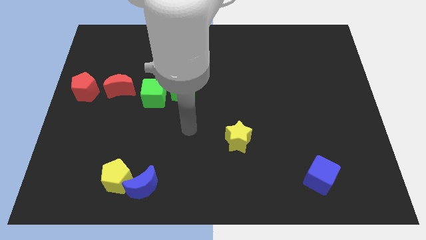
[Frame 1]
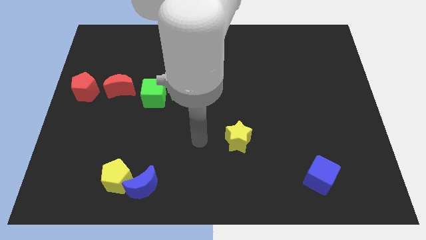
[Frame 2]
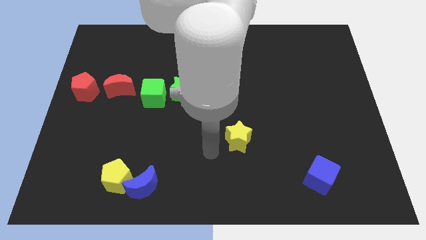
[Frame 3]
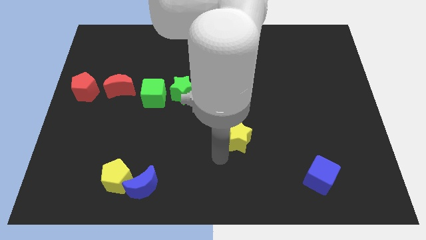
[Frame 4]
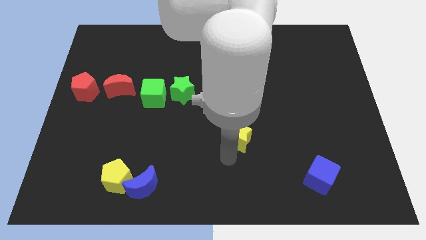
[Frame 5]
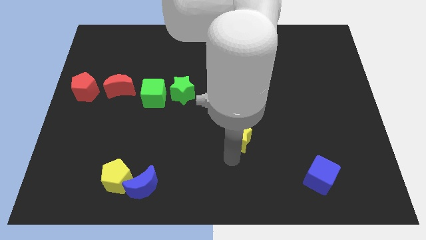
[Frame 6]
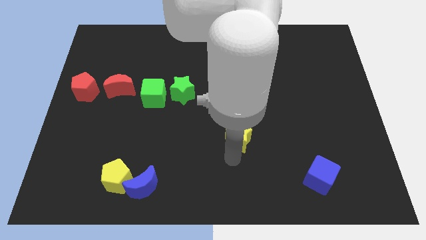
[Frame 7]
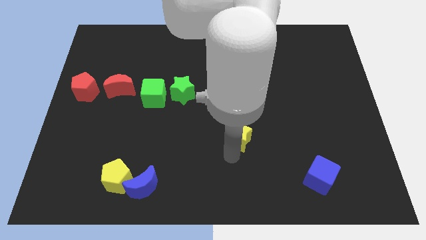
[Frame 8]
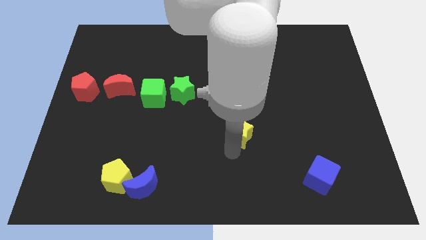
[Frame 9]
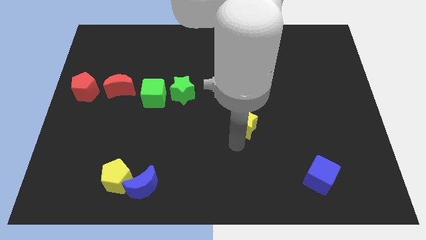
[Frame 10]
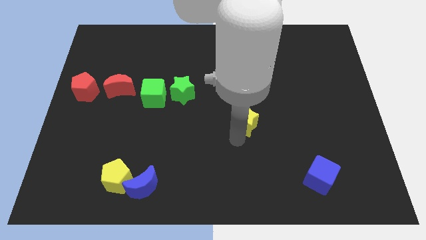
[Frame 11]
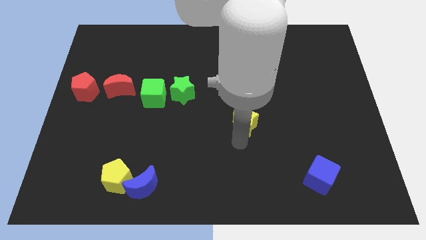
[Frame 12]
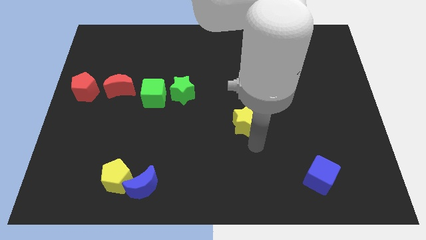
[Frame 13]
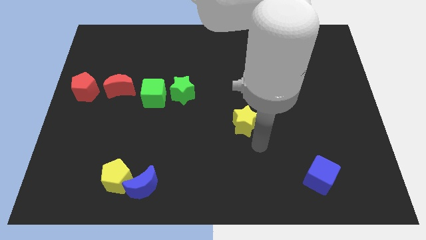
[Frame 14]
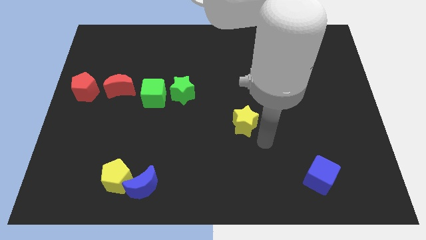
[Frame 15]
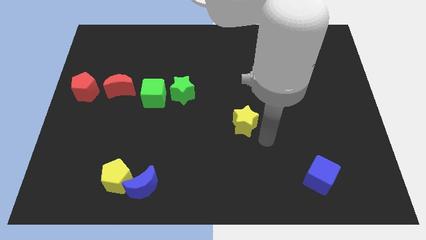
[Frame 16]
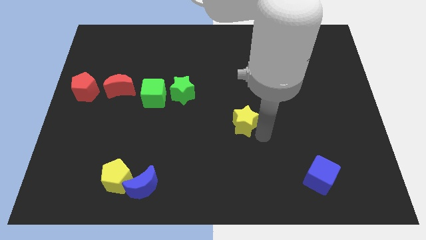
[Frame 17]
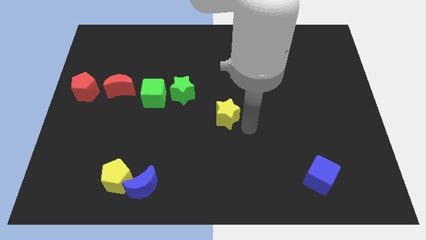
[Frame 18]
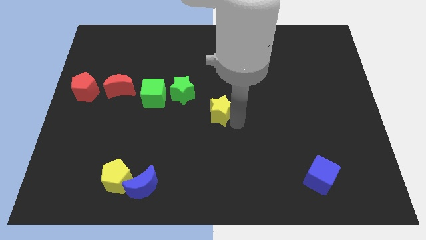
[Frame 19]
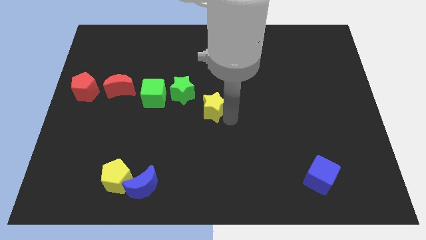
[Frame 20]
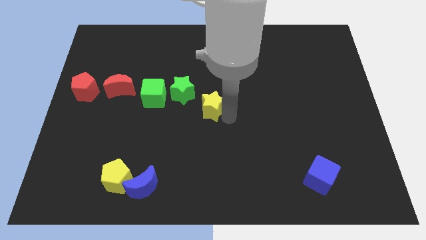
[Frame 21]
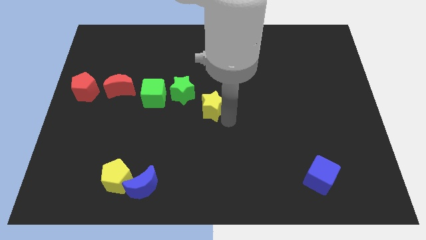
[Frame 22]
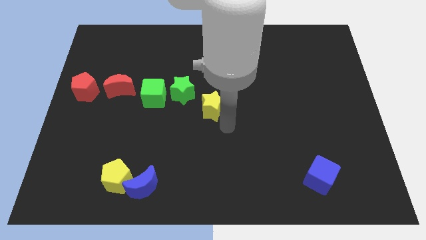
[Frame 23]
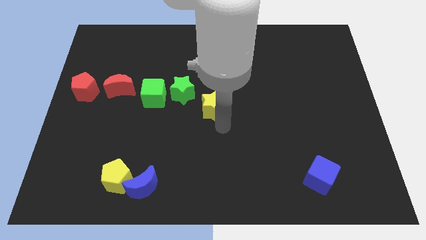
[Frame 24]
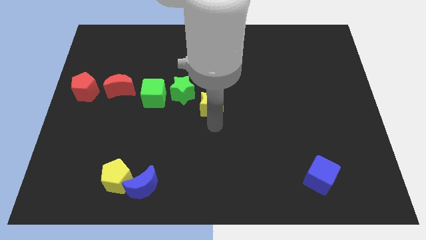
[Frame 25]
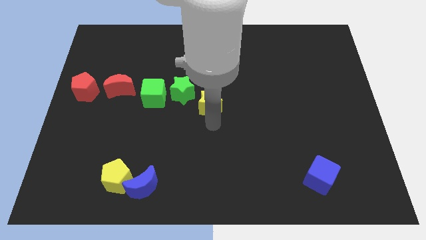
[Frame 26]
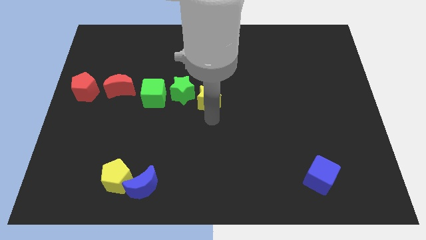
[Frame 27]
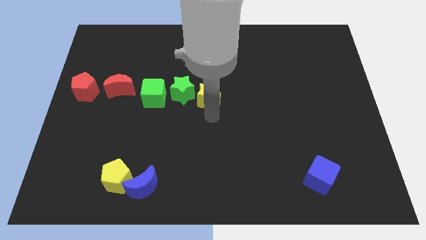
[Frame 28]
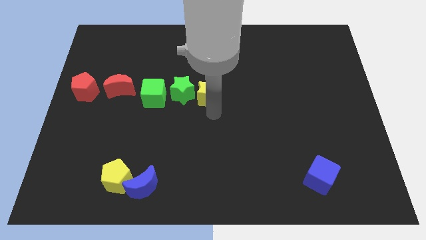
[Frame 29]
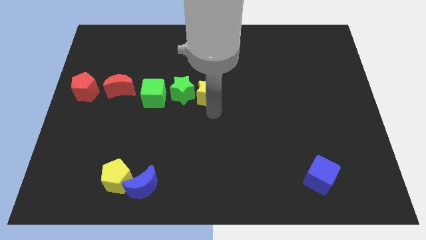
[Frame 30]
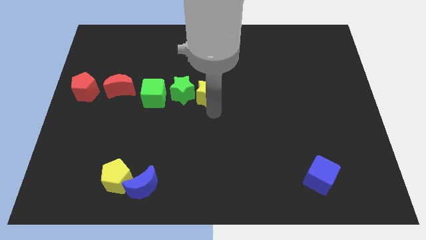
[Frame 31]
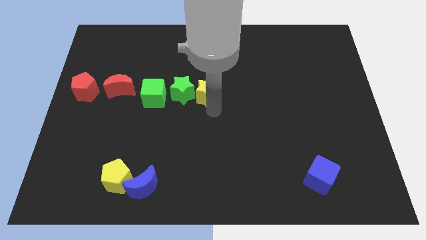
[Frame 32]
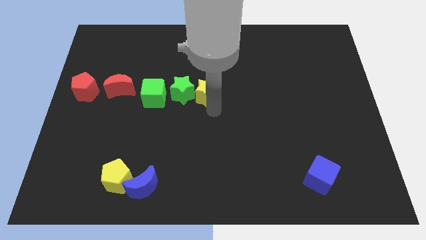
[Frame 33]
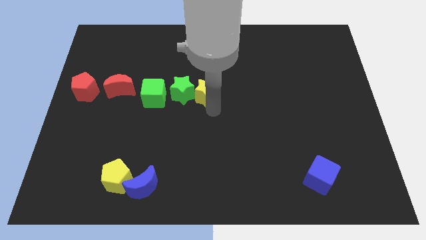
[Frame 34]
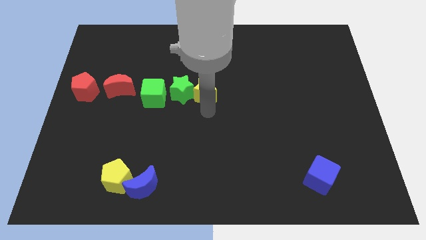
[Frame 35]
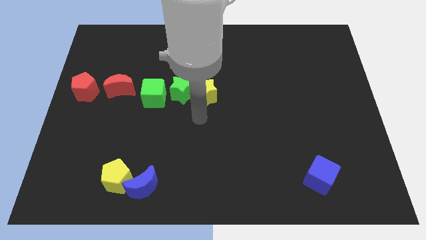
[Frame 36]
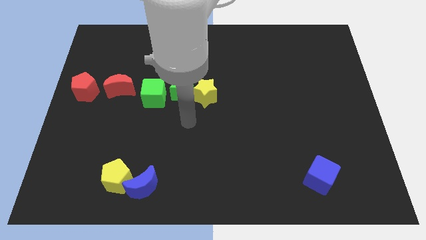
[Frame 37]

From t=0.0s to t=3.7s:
place the yellow star to the right side of the green star

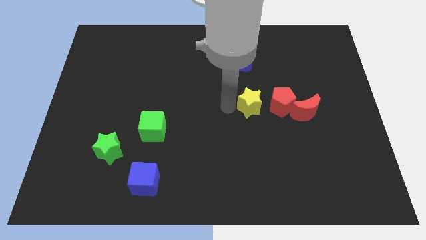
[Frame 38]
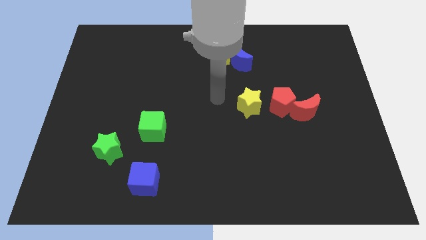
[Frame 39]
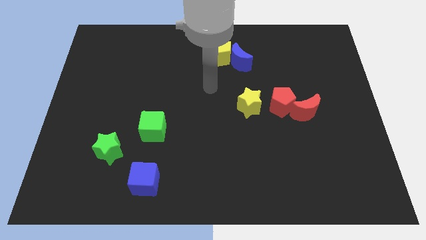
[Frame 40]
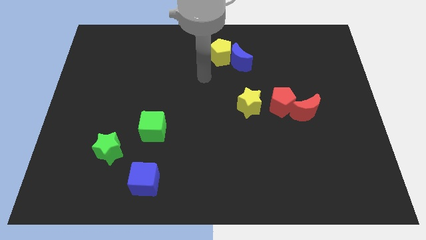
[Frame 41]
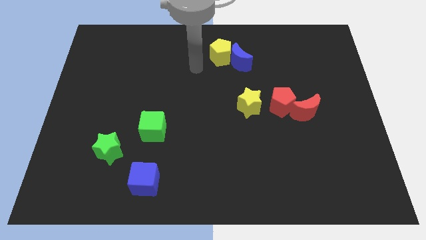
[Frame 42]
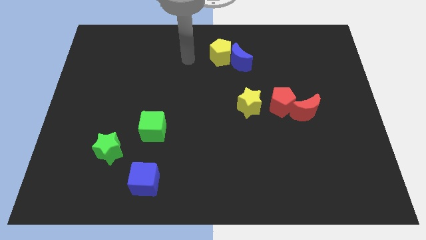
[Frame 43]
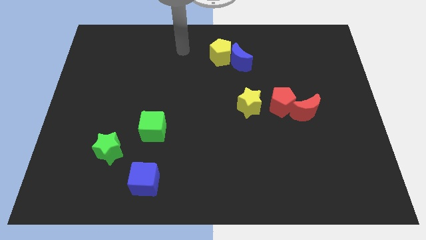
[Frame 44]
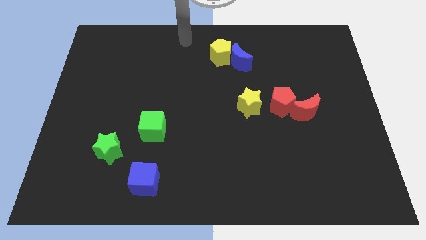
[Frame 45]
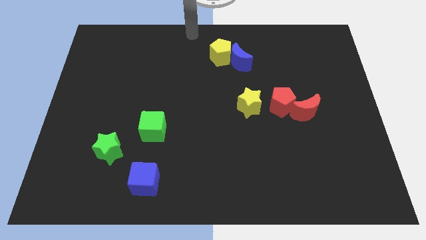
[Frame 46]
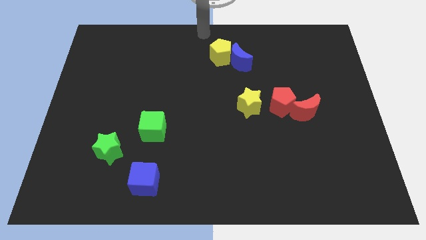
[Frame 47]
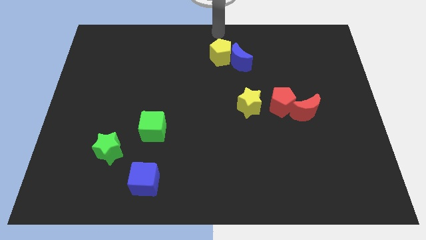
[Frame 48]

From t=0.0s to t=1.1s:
move the arm to the top of yellow pentagon

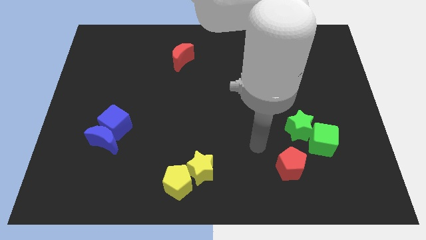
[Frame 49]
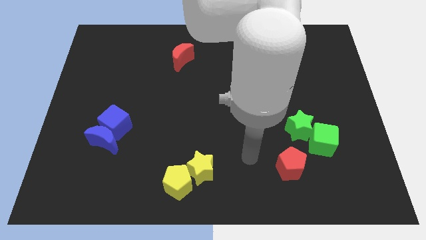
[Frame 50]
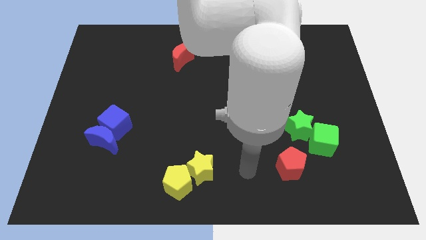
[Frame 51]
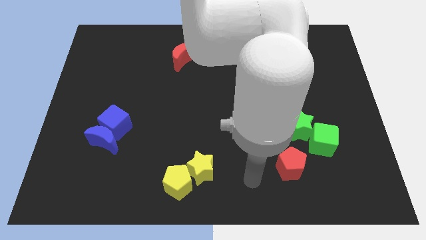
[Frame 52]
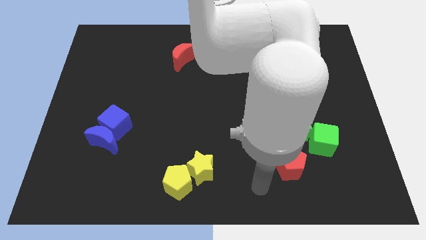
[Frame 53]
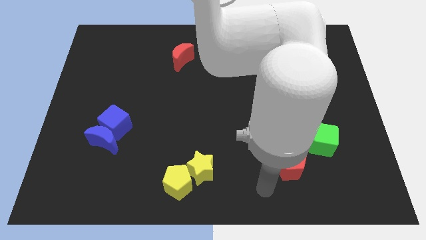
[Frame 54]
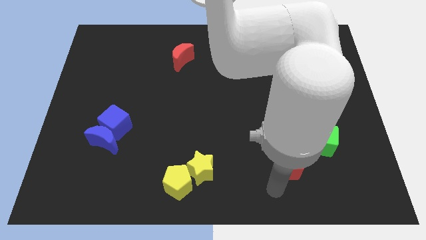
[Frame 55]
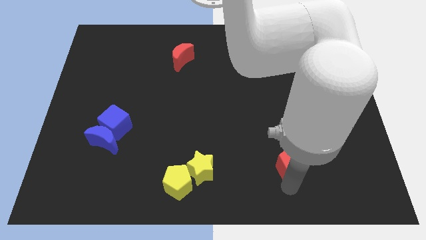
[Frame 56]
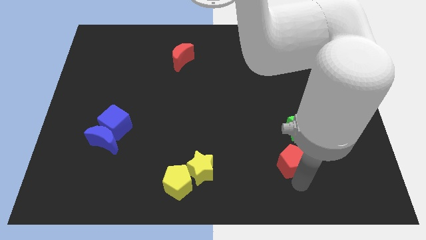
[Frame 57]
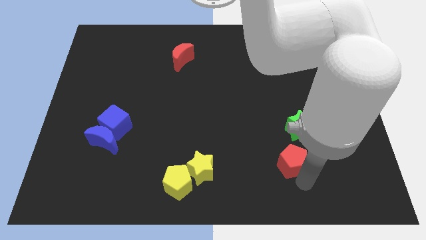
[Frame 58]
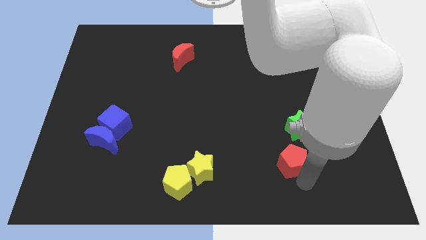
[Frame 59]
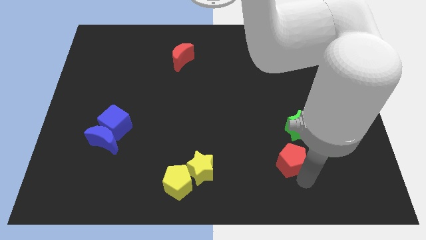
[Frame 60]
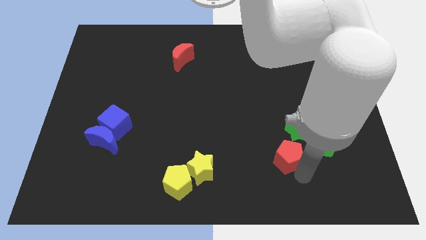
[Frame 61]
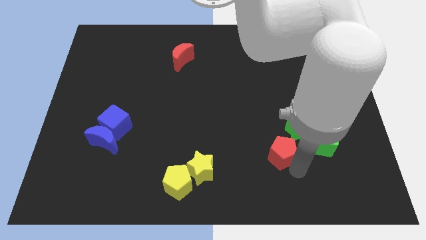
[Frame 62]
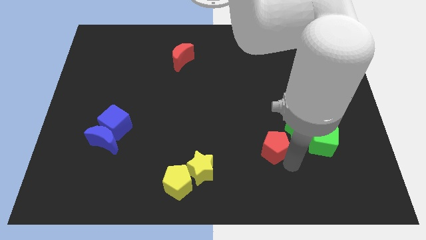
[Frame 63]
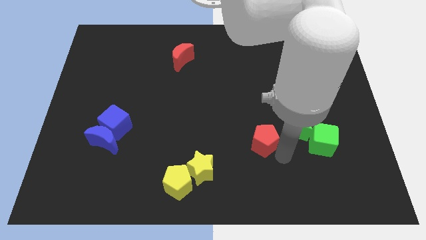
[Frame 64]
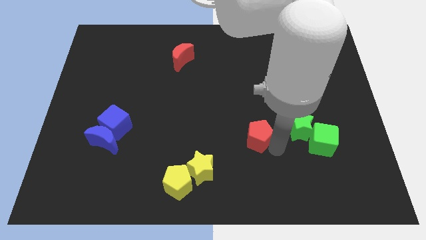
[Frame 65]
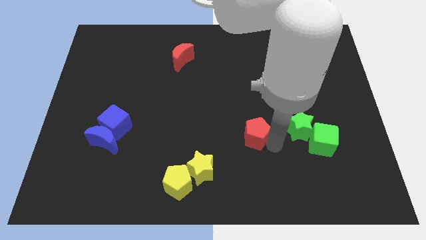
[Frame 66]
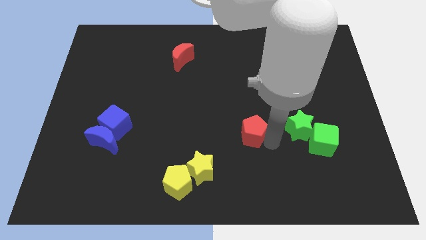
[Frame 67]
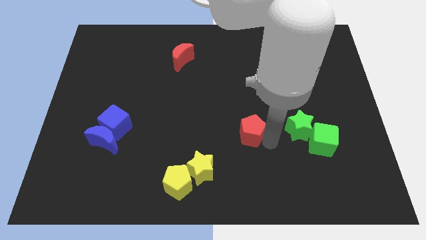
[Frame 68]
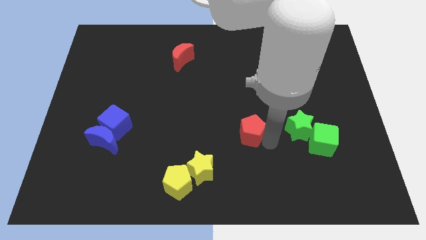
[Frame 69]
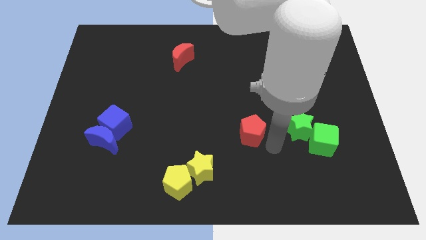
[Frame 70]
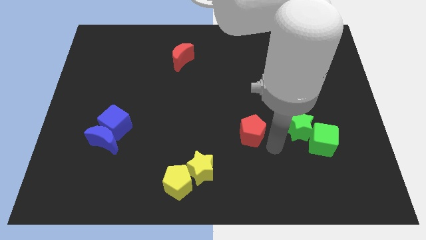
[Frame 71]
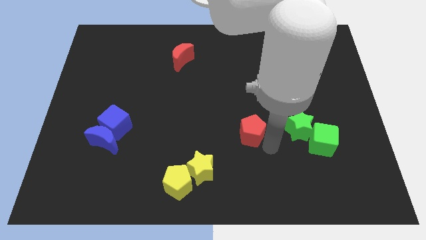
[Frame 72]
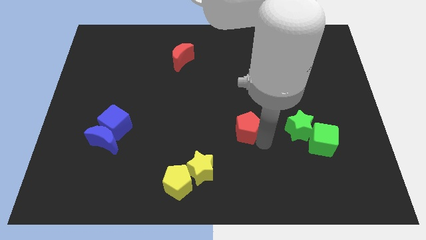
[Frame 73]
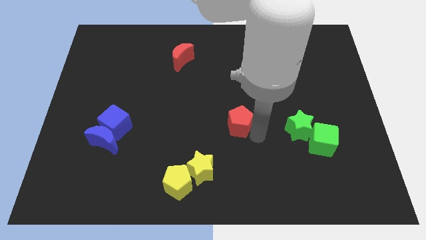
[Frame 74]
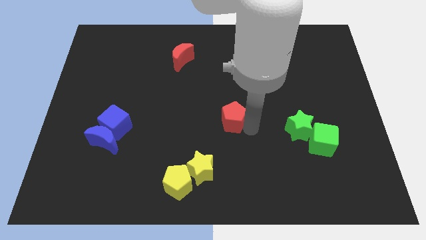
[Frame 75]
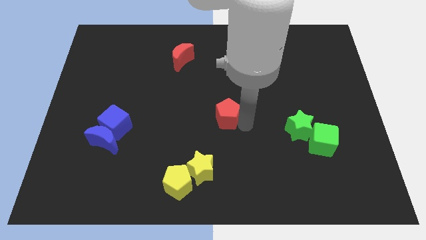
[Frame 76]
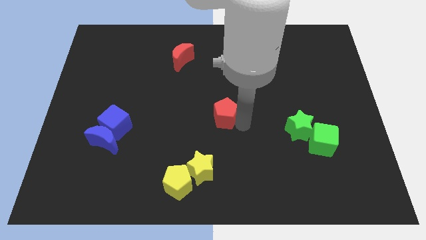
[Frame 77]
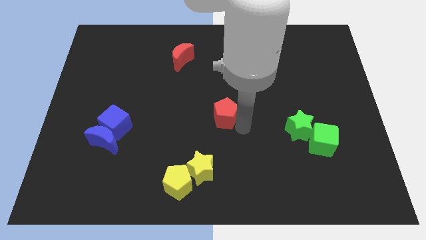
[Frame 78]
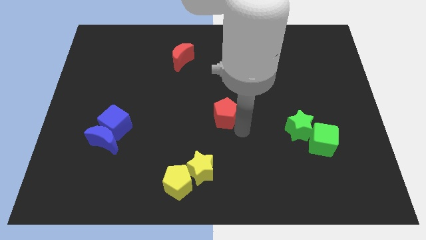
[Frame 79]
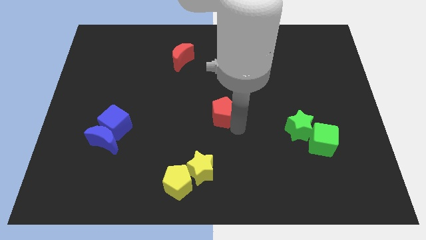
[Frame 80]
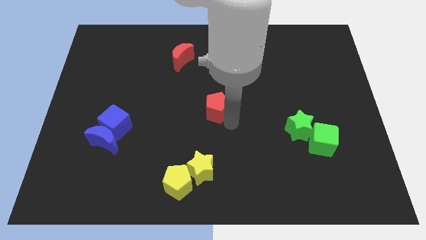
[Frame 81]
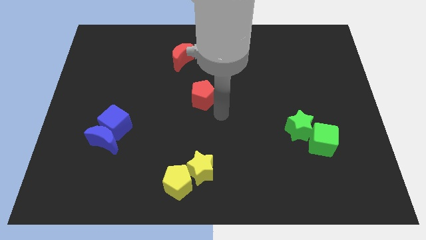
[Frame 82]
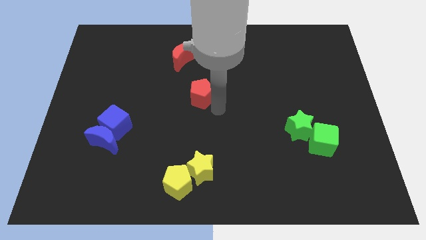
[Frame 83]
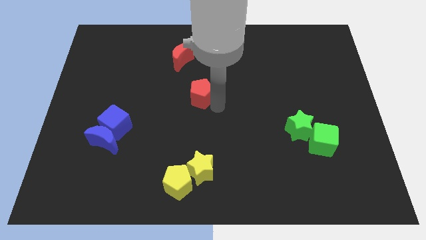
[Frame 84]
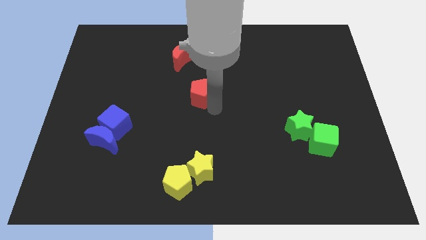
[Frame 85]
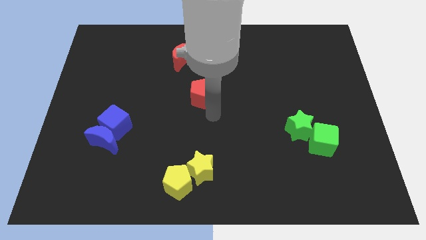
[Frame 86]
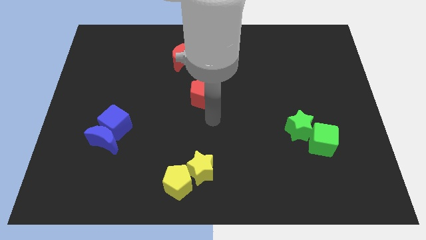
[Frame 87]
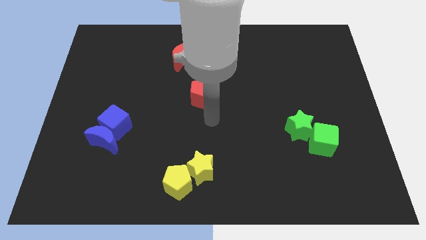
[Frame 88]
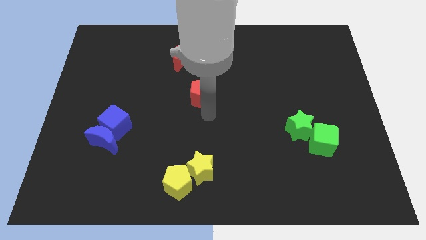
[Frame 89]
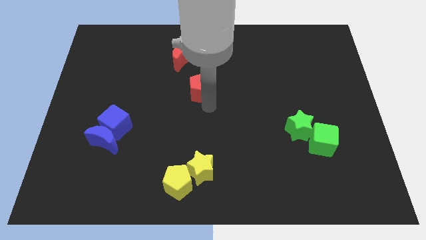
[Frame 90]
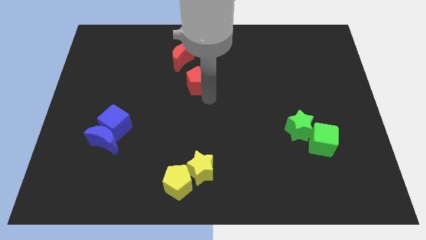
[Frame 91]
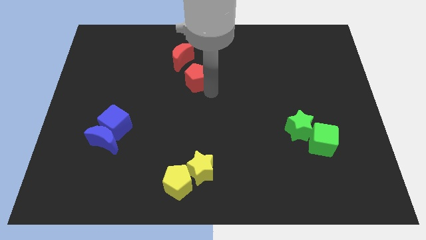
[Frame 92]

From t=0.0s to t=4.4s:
place the red pentagon above the yellow star and pentagon
